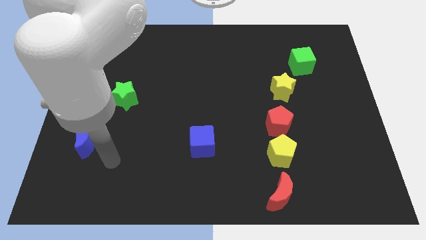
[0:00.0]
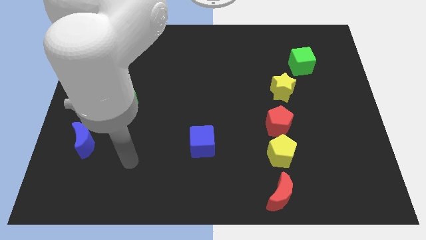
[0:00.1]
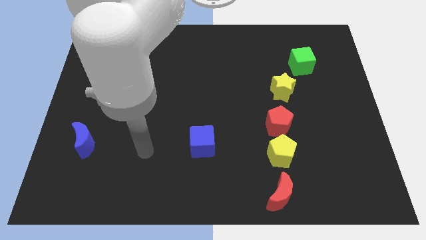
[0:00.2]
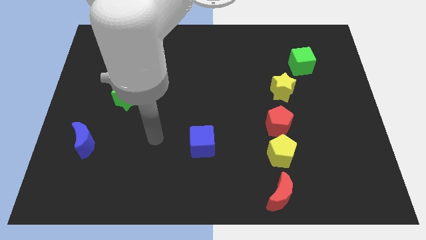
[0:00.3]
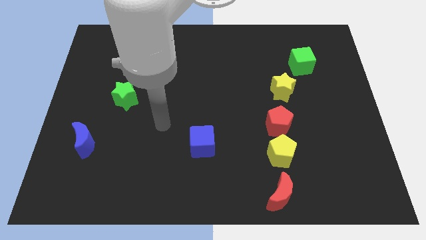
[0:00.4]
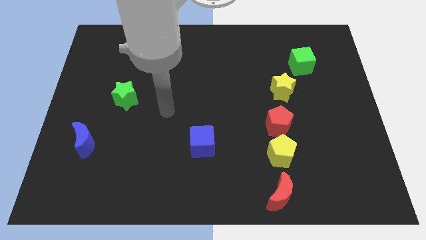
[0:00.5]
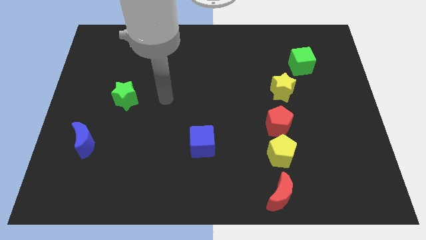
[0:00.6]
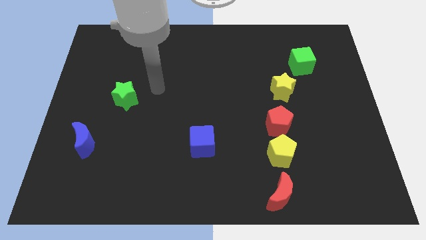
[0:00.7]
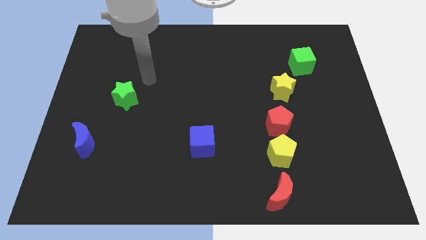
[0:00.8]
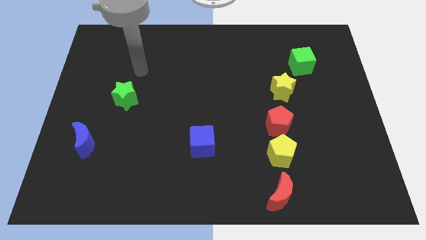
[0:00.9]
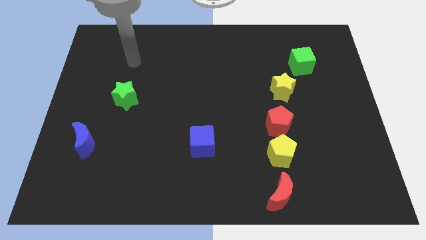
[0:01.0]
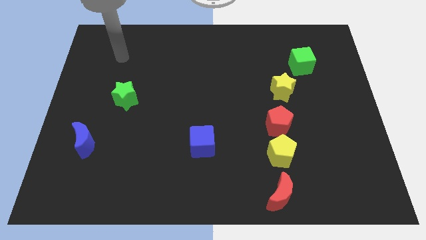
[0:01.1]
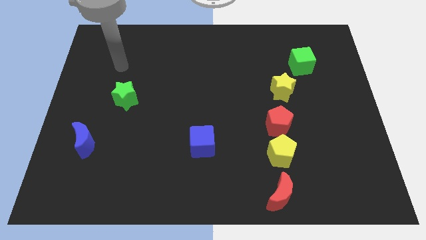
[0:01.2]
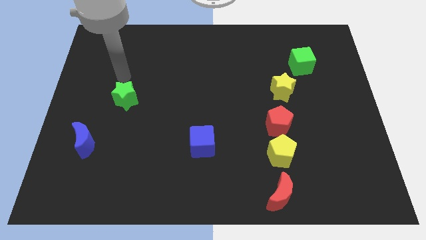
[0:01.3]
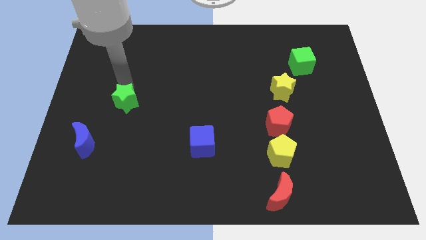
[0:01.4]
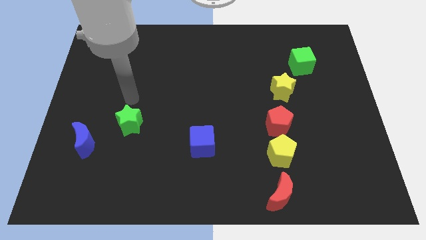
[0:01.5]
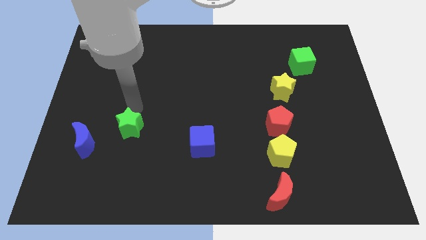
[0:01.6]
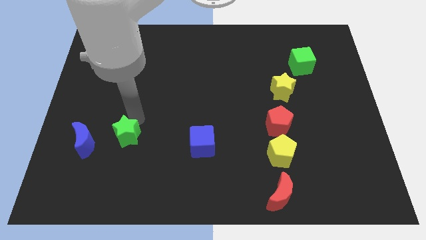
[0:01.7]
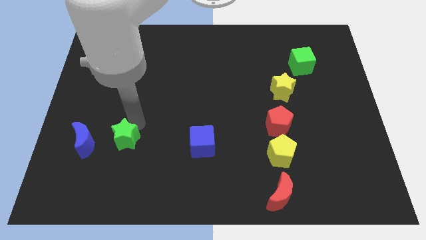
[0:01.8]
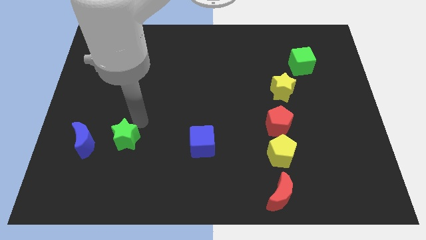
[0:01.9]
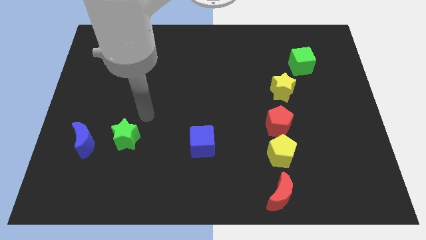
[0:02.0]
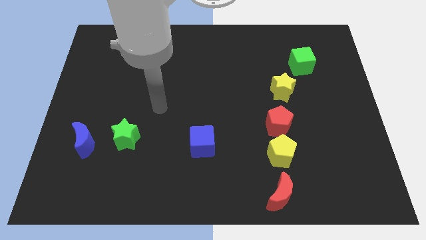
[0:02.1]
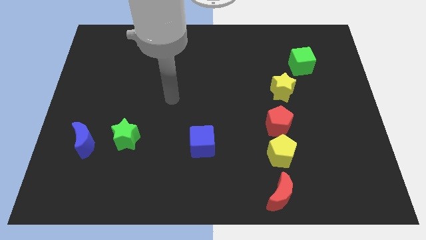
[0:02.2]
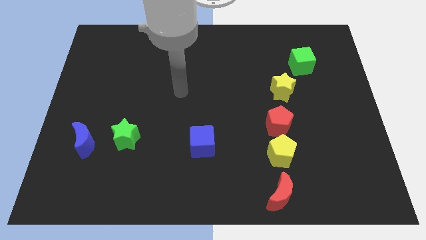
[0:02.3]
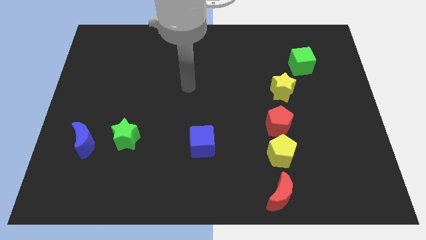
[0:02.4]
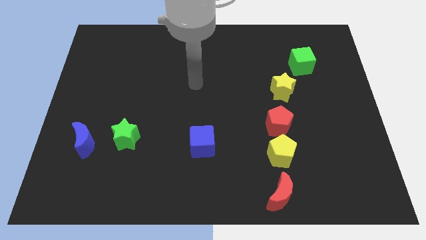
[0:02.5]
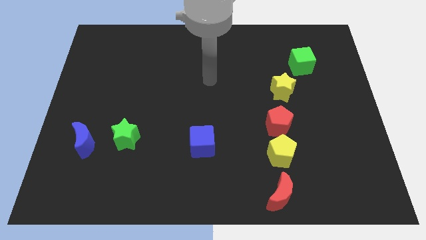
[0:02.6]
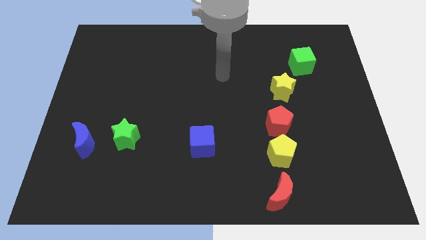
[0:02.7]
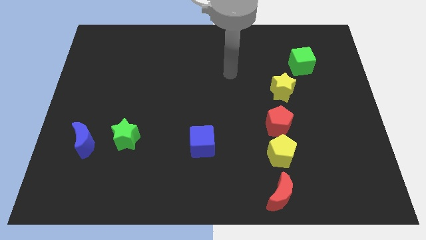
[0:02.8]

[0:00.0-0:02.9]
place the green star at right side of the blue crescent

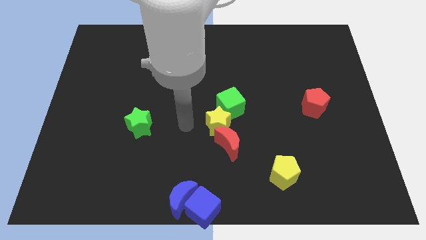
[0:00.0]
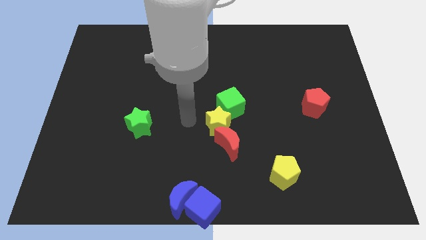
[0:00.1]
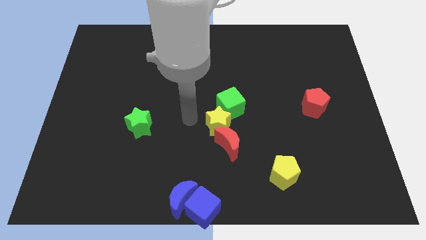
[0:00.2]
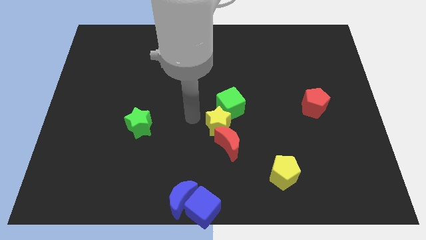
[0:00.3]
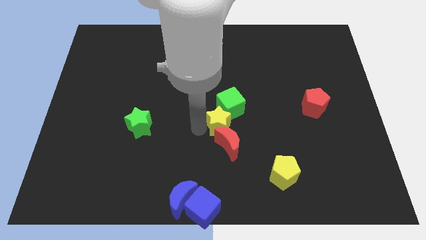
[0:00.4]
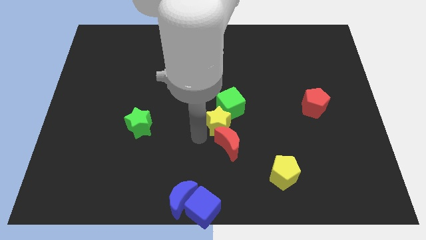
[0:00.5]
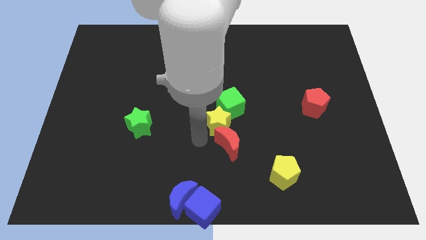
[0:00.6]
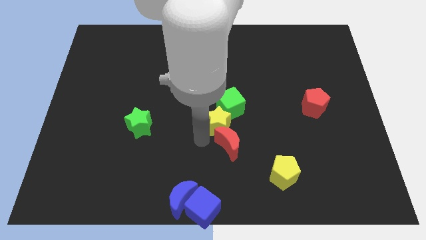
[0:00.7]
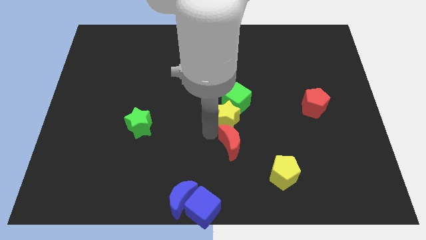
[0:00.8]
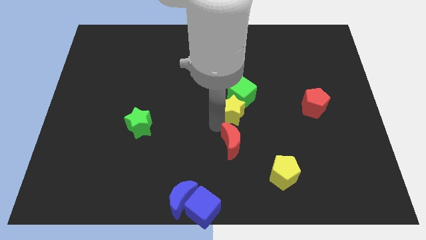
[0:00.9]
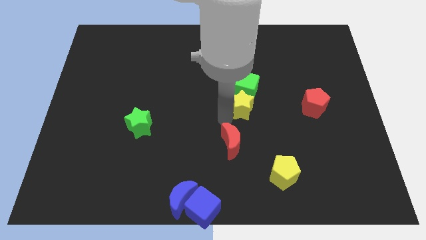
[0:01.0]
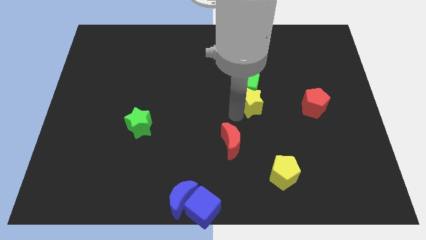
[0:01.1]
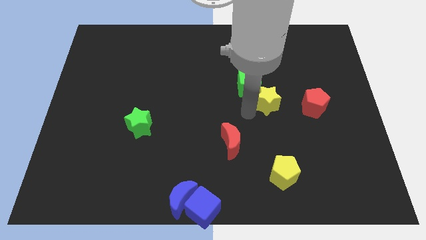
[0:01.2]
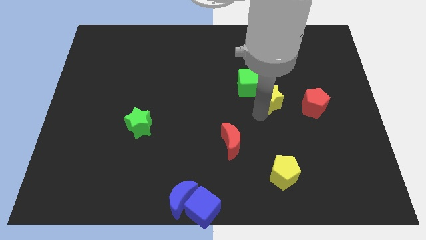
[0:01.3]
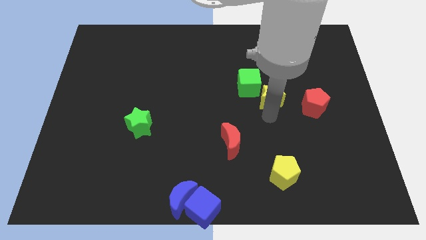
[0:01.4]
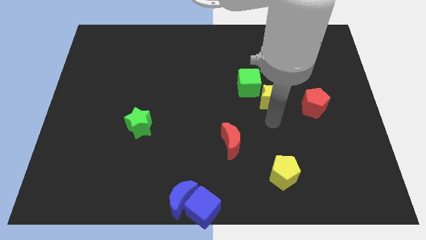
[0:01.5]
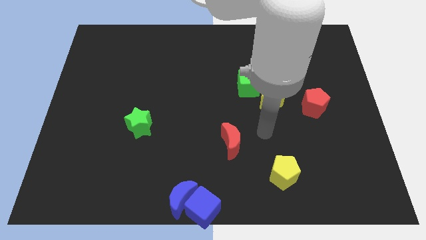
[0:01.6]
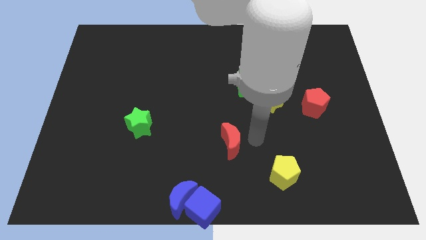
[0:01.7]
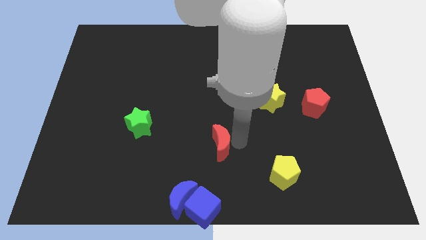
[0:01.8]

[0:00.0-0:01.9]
push the yellow star towards the green cube

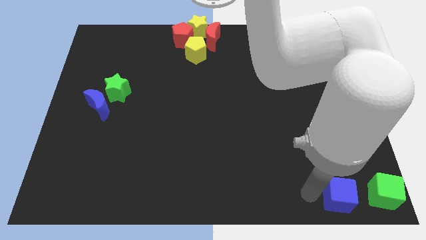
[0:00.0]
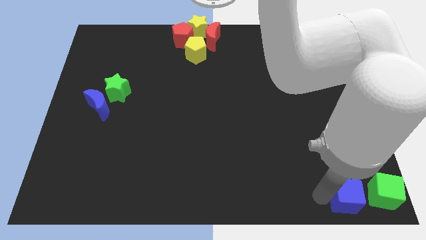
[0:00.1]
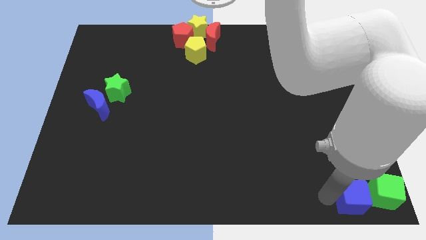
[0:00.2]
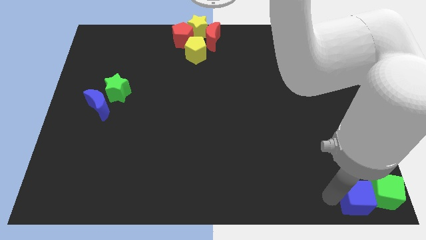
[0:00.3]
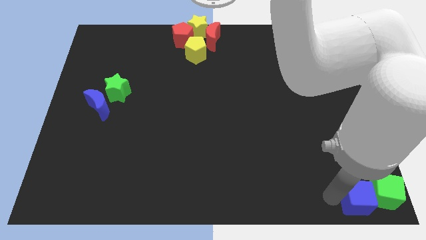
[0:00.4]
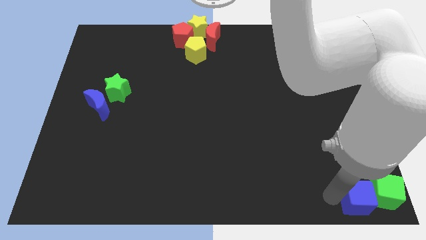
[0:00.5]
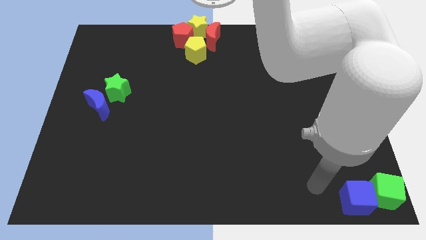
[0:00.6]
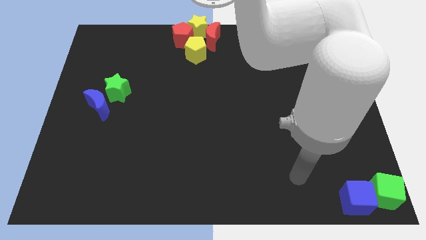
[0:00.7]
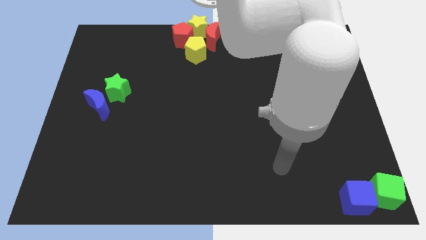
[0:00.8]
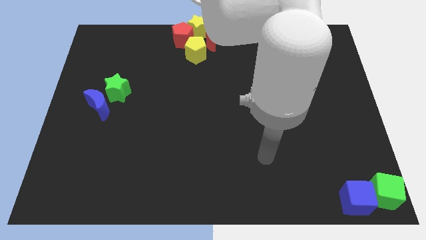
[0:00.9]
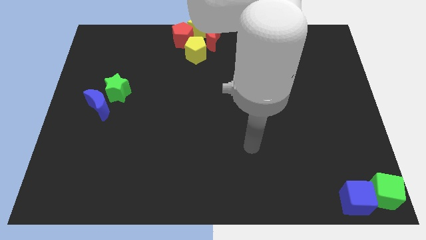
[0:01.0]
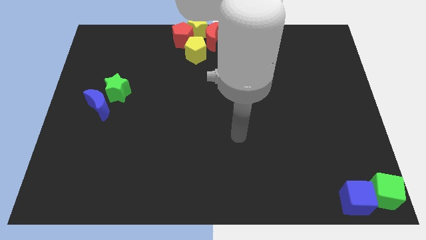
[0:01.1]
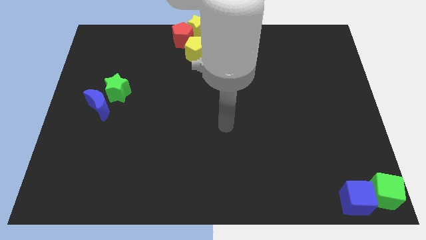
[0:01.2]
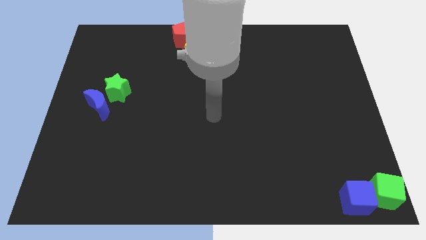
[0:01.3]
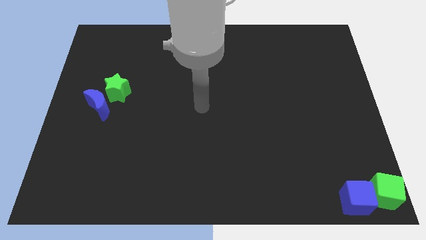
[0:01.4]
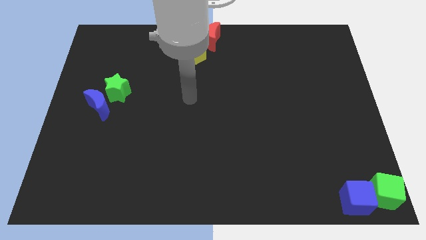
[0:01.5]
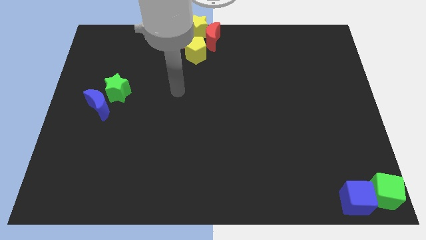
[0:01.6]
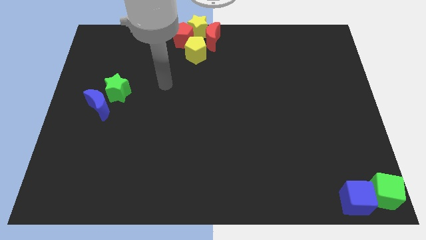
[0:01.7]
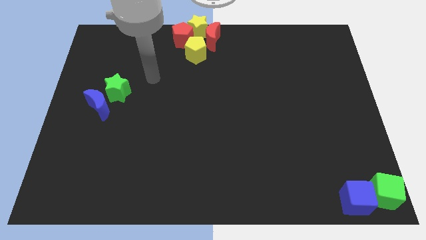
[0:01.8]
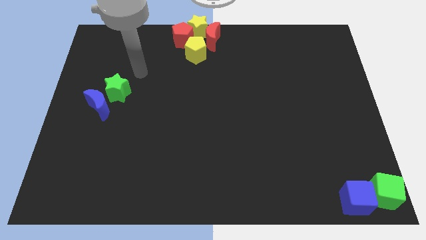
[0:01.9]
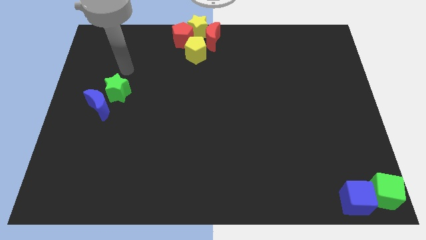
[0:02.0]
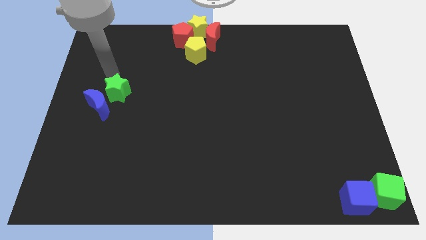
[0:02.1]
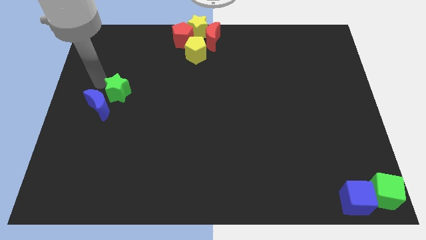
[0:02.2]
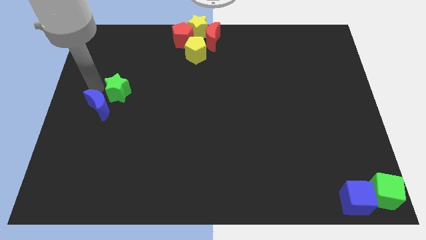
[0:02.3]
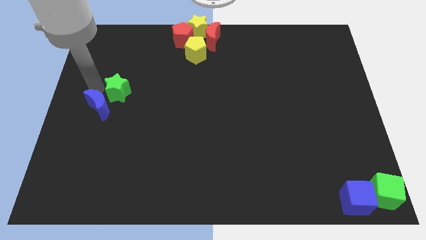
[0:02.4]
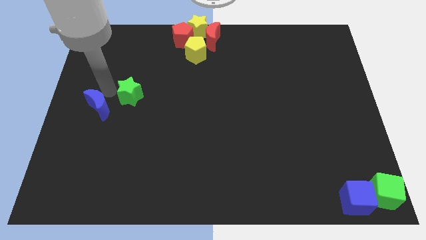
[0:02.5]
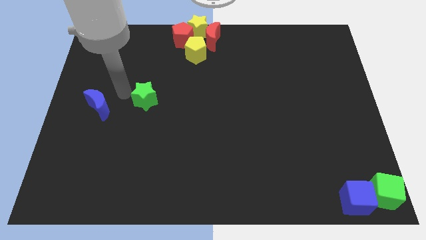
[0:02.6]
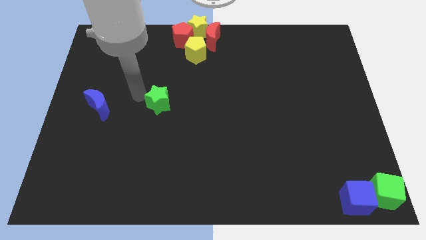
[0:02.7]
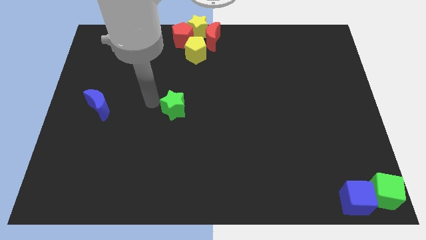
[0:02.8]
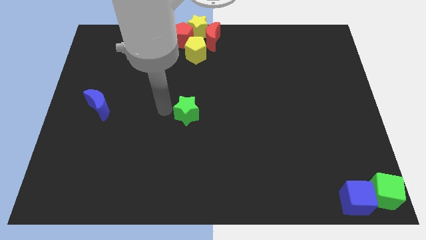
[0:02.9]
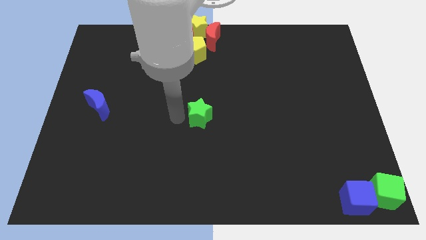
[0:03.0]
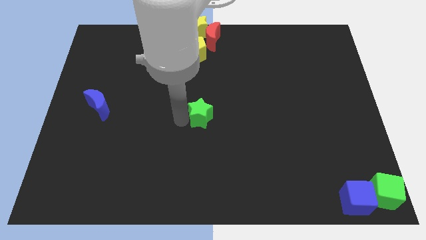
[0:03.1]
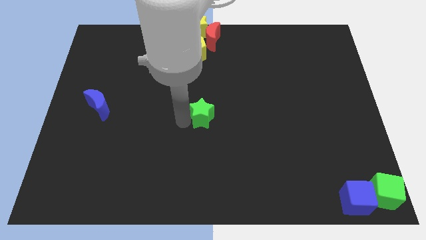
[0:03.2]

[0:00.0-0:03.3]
place the green star to the center of the board

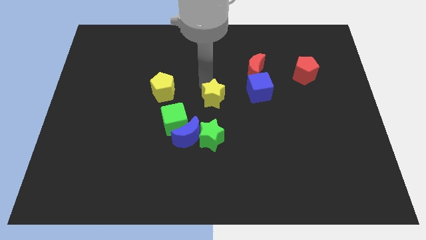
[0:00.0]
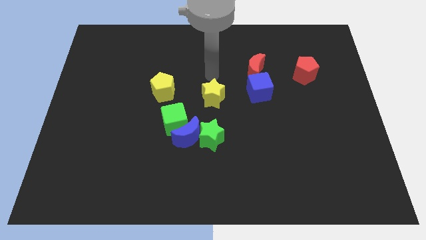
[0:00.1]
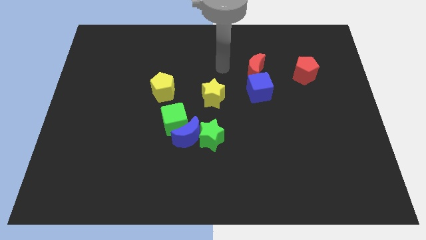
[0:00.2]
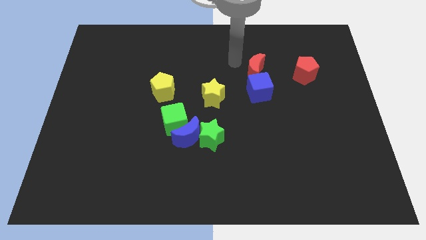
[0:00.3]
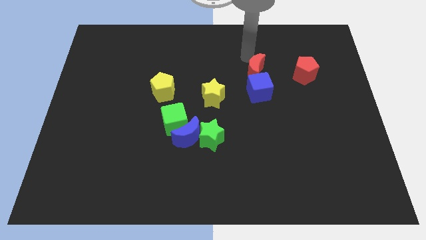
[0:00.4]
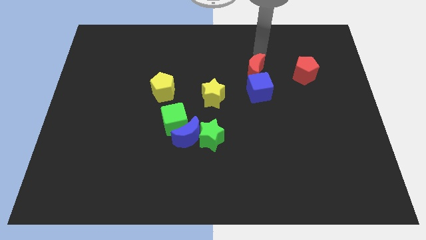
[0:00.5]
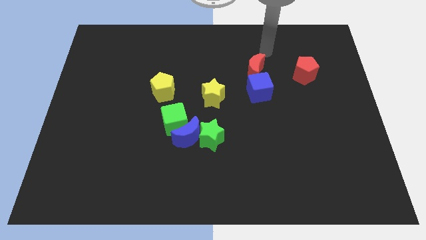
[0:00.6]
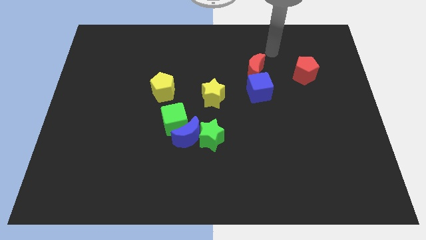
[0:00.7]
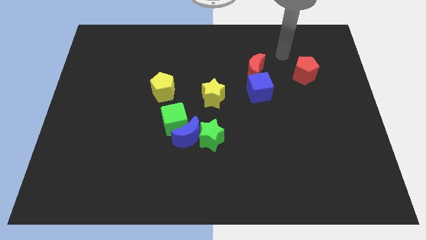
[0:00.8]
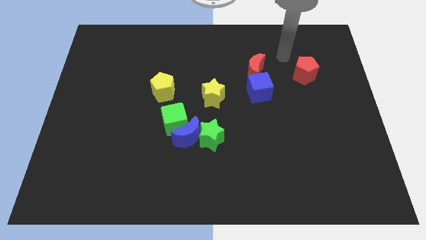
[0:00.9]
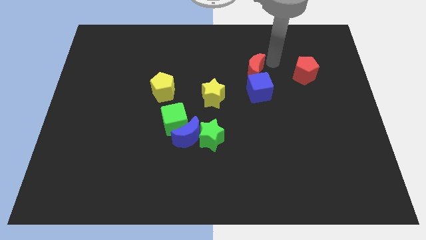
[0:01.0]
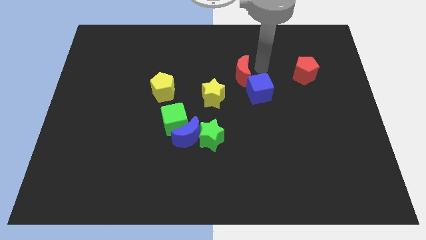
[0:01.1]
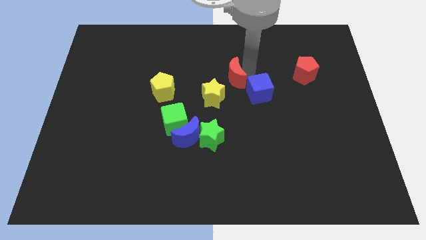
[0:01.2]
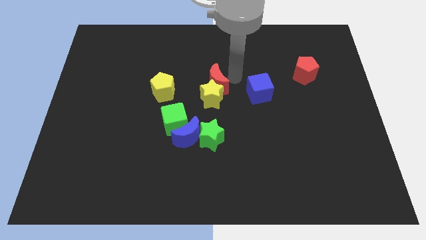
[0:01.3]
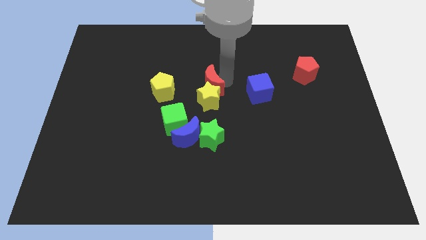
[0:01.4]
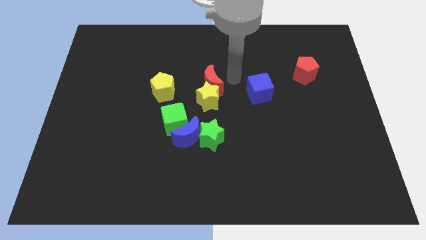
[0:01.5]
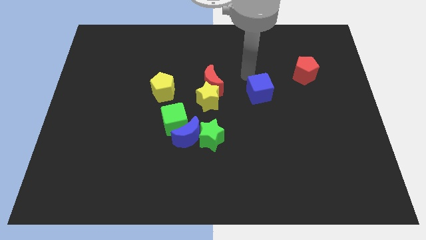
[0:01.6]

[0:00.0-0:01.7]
push the red moon into yellow star on top
